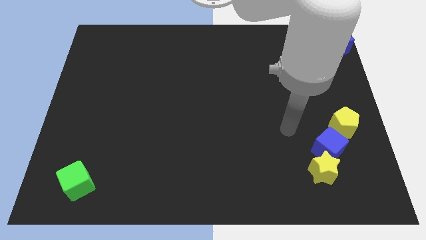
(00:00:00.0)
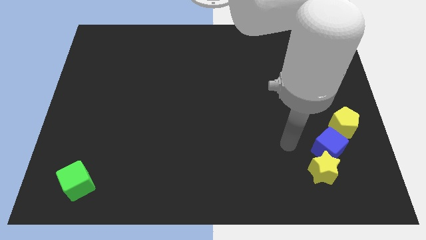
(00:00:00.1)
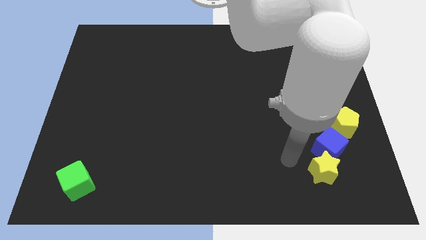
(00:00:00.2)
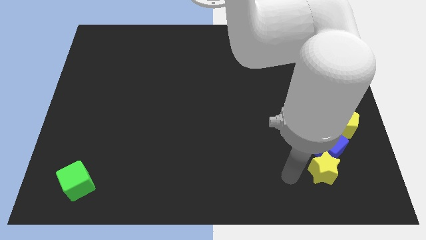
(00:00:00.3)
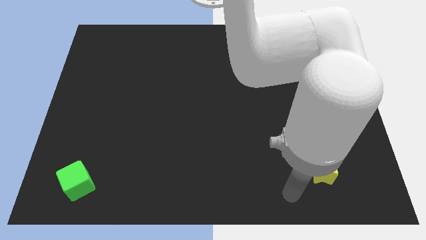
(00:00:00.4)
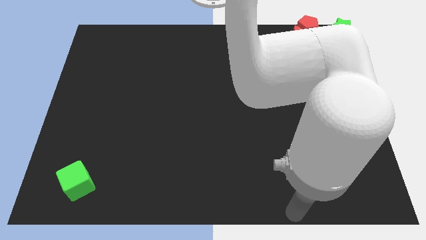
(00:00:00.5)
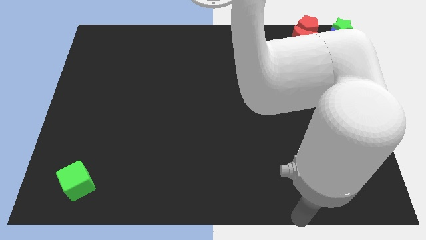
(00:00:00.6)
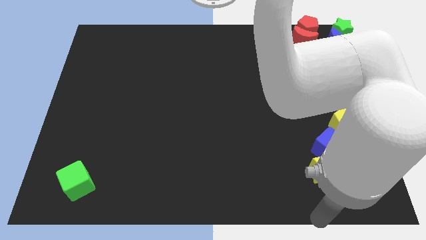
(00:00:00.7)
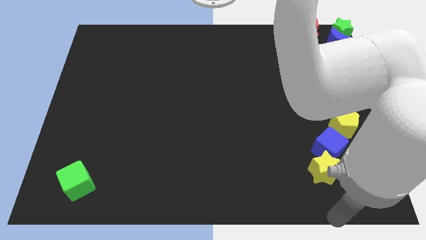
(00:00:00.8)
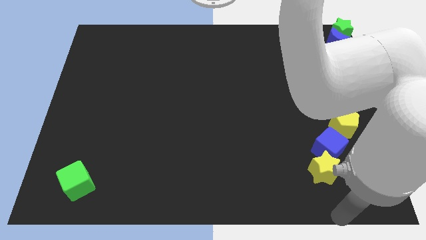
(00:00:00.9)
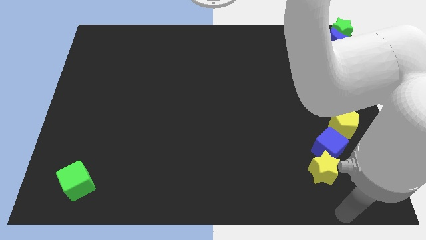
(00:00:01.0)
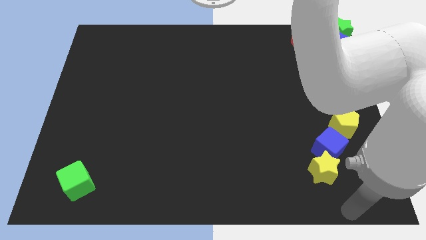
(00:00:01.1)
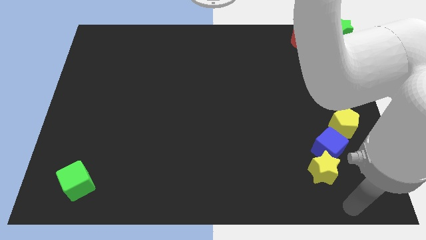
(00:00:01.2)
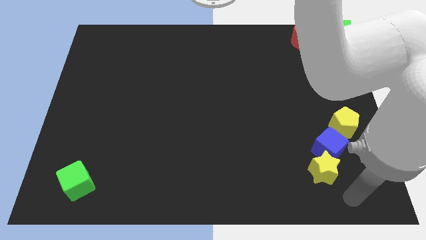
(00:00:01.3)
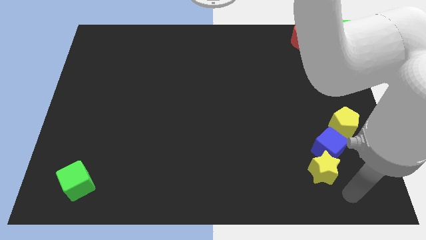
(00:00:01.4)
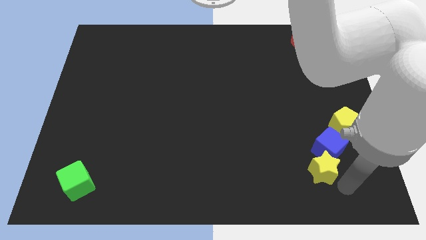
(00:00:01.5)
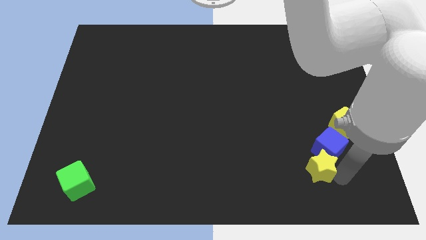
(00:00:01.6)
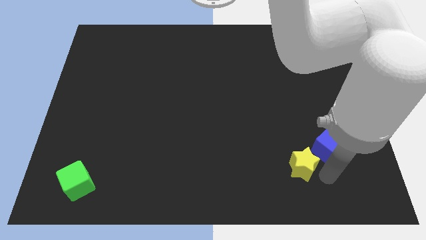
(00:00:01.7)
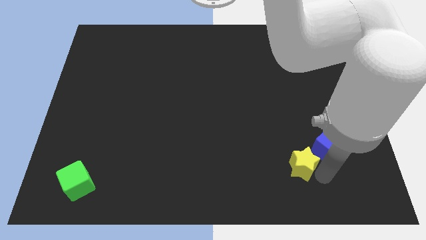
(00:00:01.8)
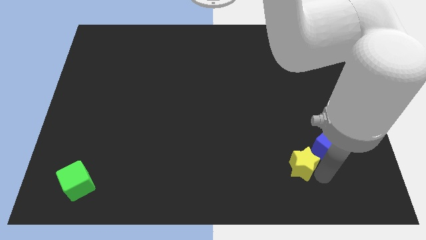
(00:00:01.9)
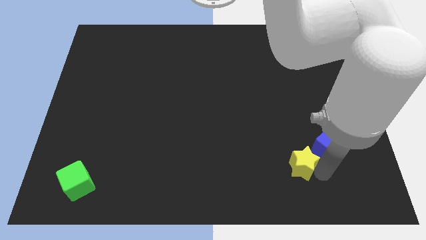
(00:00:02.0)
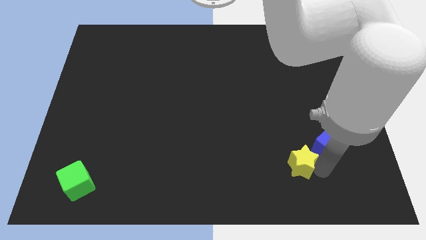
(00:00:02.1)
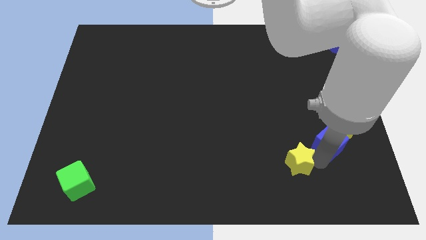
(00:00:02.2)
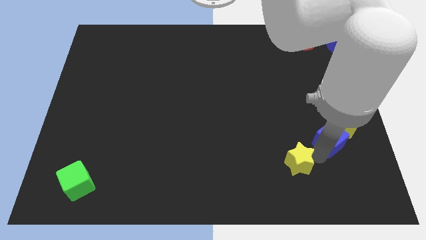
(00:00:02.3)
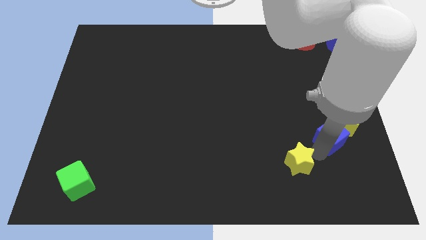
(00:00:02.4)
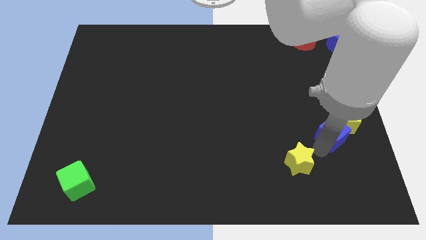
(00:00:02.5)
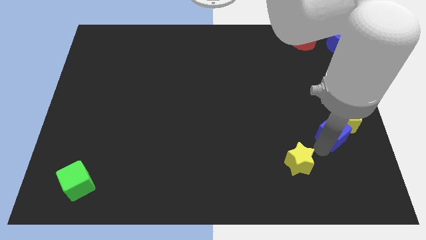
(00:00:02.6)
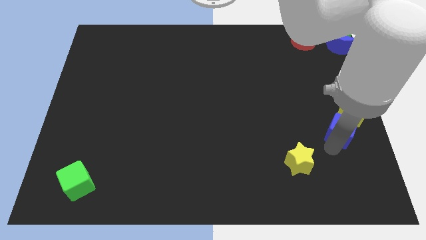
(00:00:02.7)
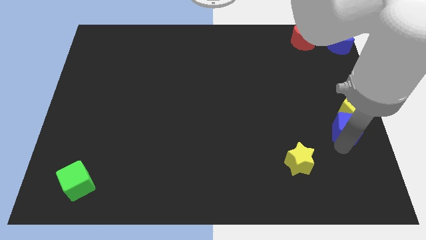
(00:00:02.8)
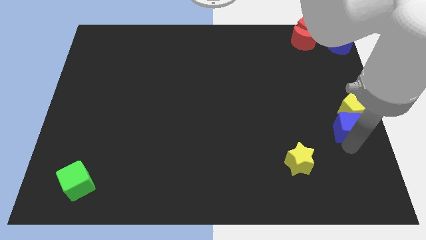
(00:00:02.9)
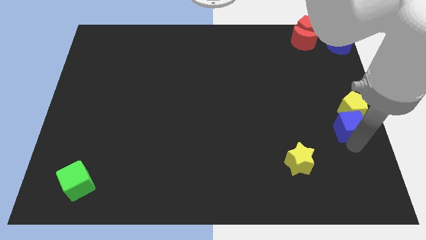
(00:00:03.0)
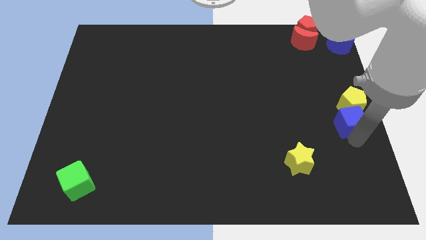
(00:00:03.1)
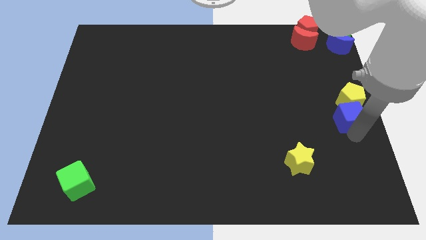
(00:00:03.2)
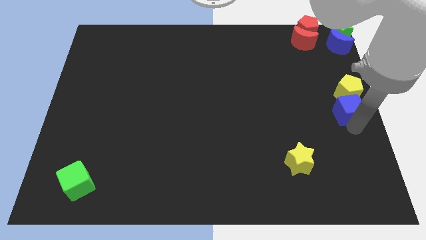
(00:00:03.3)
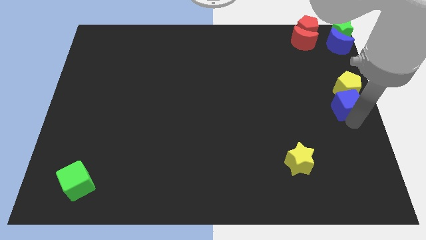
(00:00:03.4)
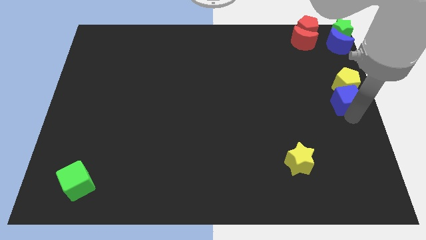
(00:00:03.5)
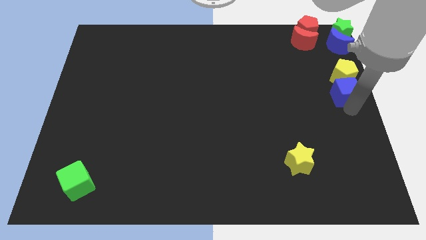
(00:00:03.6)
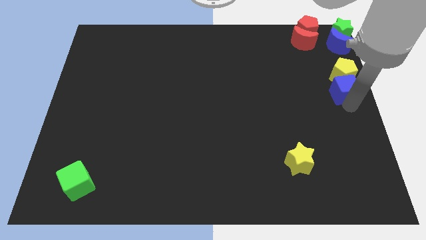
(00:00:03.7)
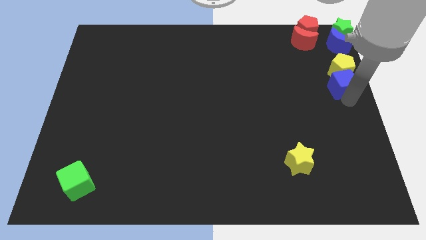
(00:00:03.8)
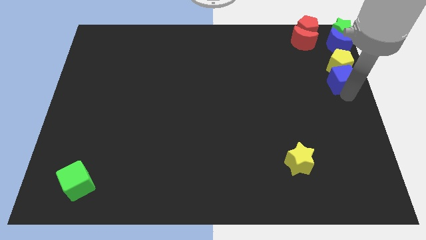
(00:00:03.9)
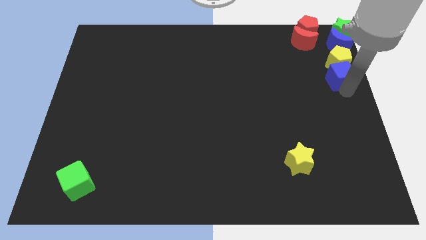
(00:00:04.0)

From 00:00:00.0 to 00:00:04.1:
place yellow pentagon and blue cube below the blue moon

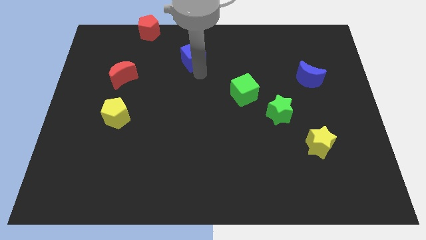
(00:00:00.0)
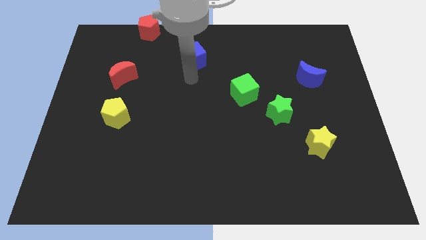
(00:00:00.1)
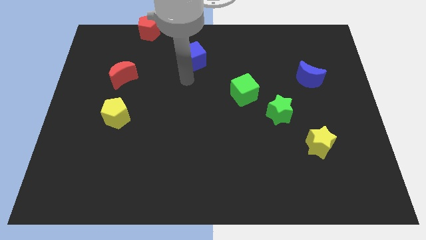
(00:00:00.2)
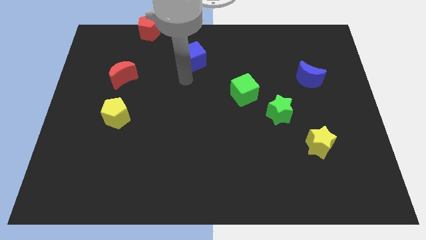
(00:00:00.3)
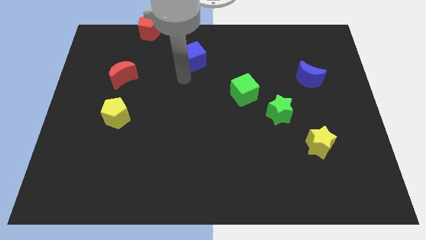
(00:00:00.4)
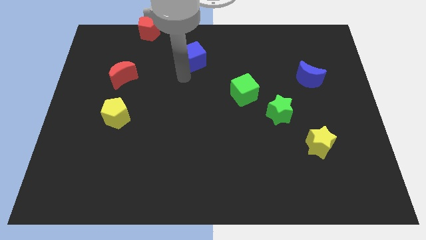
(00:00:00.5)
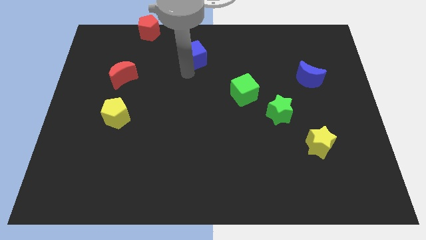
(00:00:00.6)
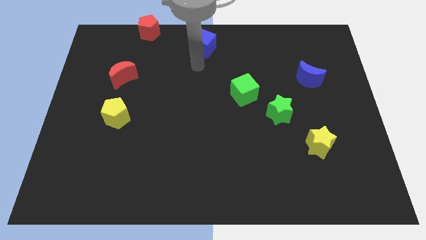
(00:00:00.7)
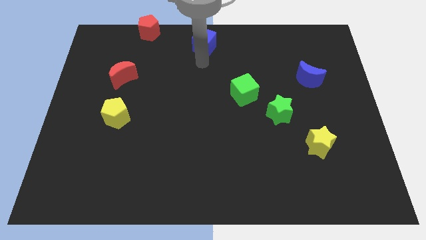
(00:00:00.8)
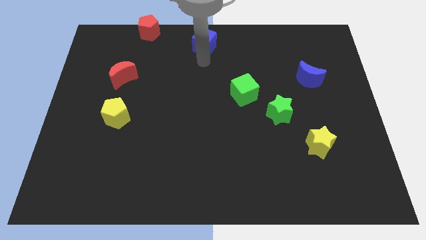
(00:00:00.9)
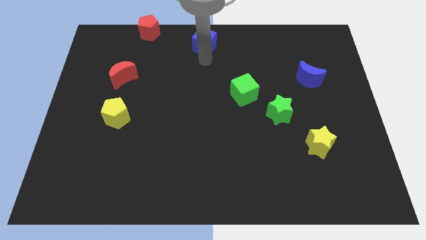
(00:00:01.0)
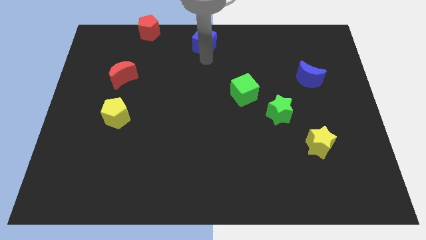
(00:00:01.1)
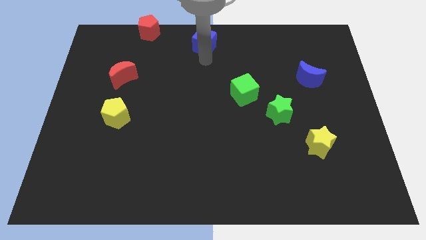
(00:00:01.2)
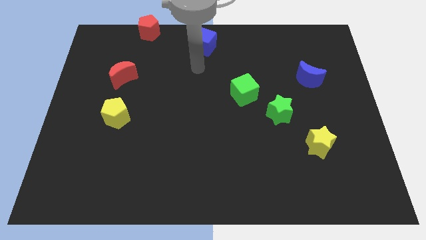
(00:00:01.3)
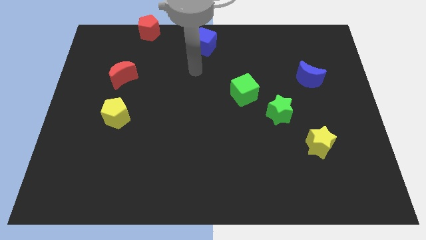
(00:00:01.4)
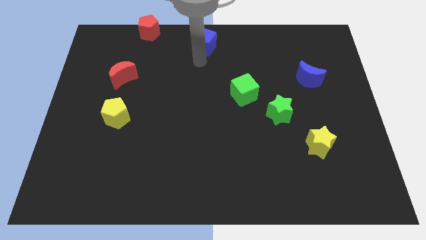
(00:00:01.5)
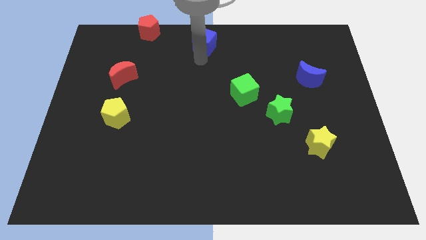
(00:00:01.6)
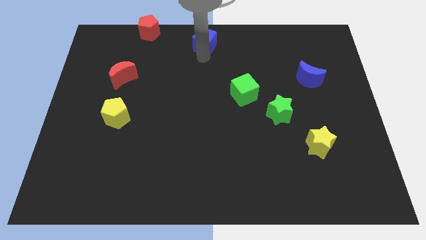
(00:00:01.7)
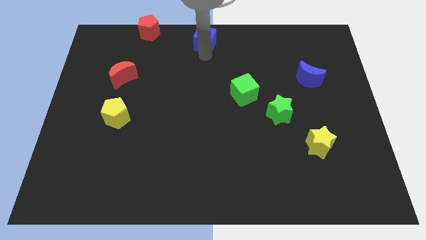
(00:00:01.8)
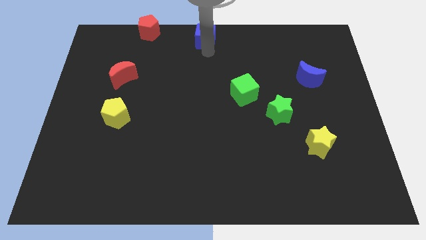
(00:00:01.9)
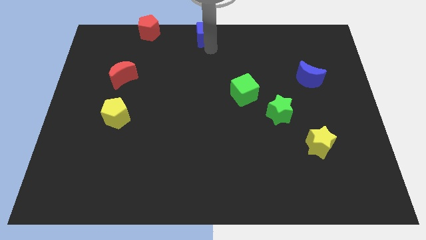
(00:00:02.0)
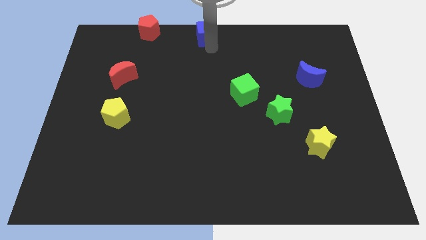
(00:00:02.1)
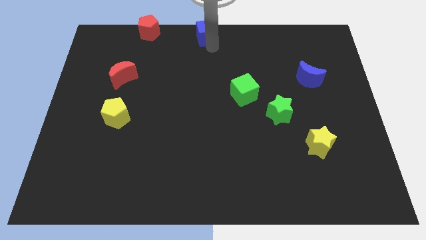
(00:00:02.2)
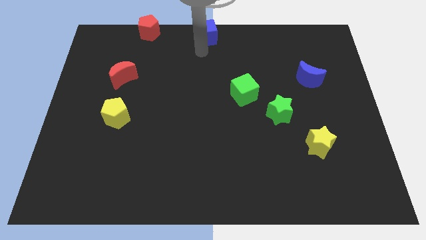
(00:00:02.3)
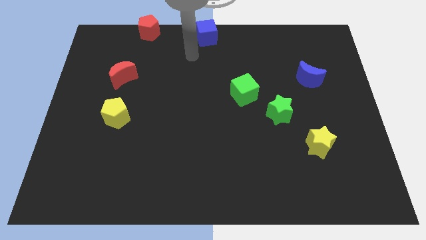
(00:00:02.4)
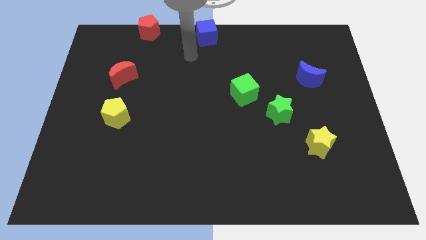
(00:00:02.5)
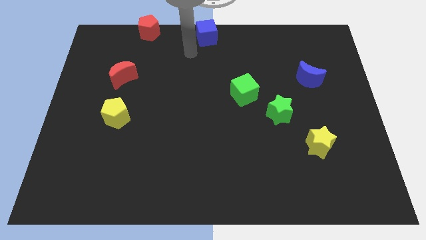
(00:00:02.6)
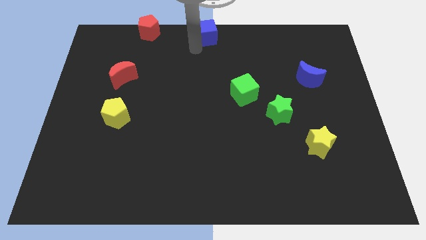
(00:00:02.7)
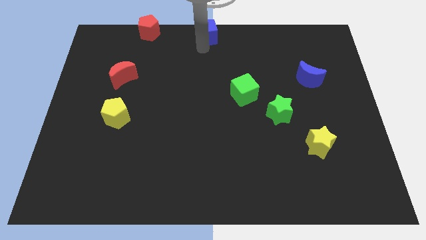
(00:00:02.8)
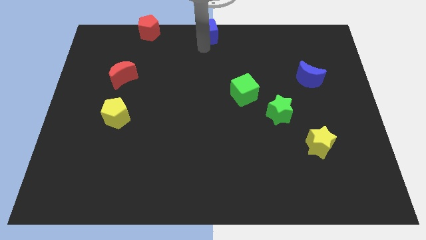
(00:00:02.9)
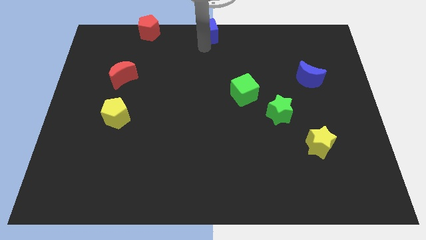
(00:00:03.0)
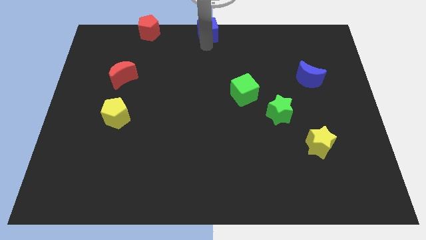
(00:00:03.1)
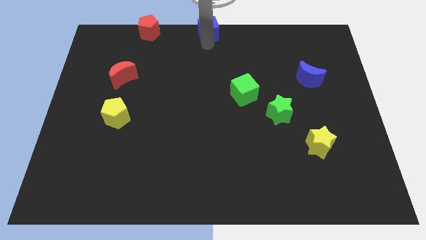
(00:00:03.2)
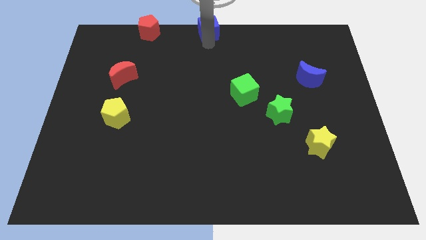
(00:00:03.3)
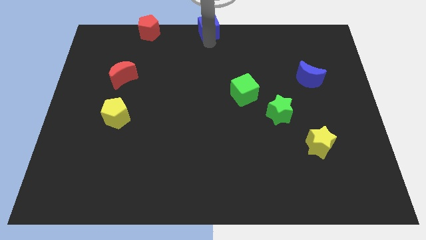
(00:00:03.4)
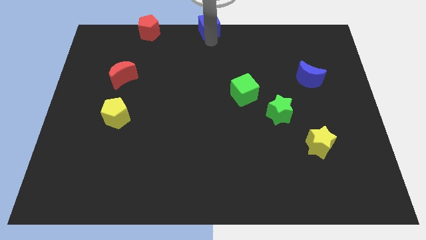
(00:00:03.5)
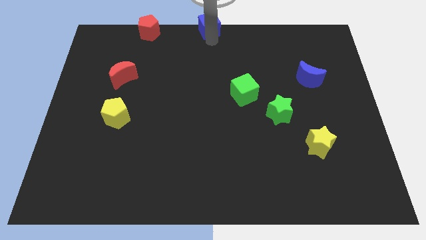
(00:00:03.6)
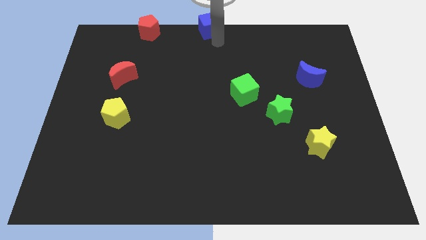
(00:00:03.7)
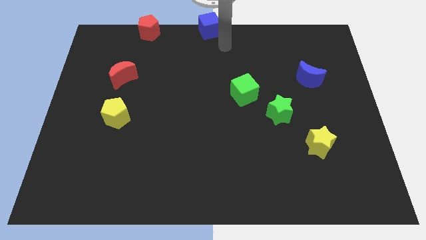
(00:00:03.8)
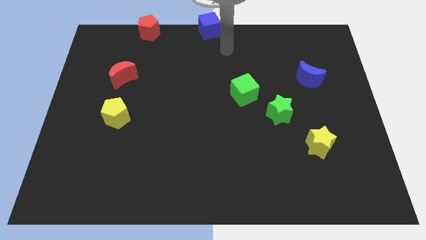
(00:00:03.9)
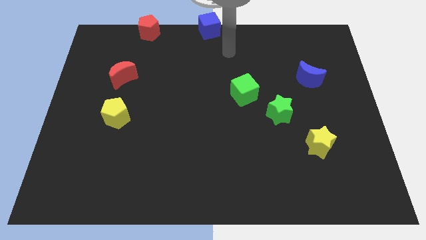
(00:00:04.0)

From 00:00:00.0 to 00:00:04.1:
place the blue cube to the top side center of the board

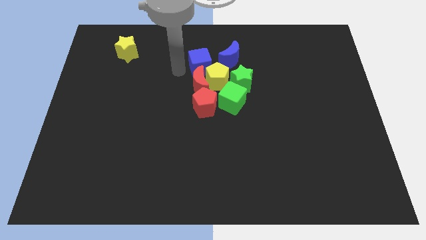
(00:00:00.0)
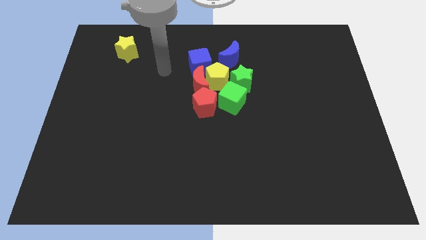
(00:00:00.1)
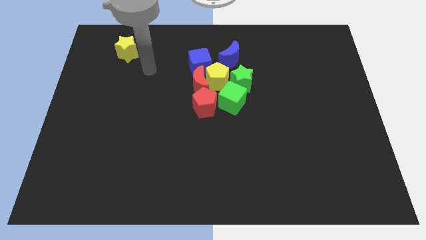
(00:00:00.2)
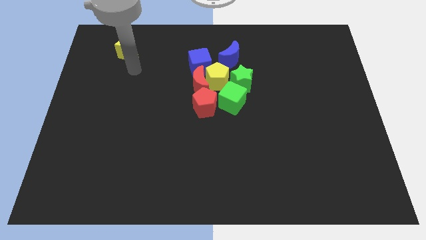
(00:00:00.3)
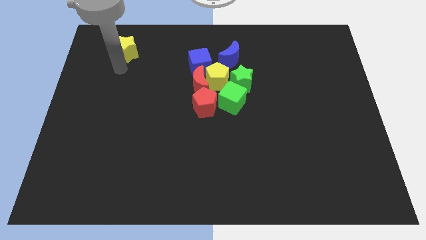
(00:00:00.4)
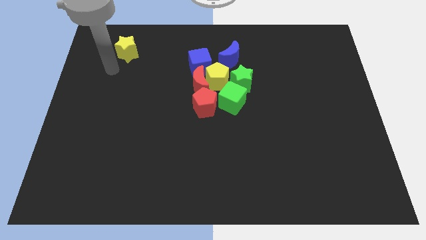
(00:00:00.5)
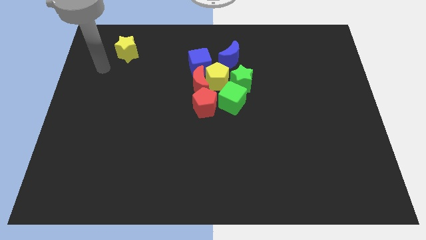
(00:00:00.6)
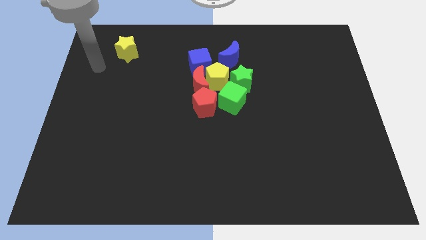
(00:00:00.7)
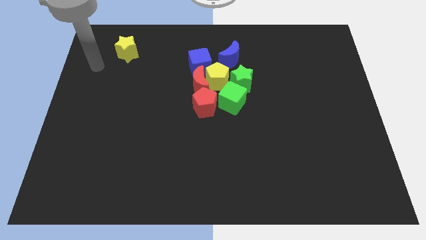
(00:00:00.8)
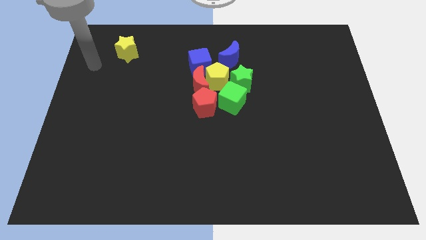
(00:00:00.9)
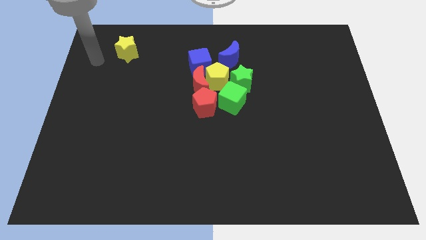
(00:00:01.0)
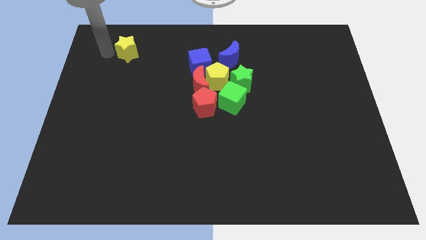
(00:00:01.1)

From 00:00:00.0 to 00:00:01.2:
move the arm left to the yellow star
